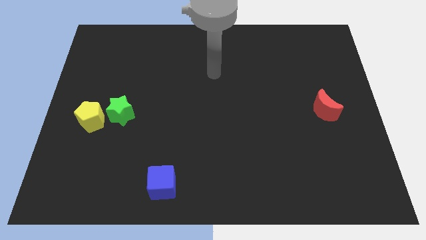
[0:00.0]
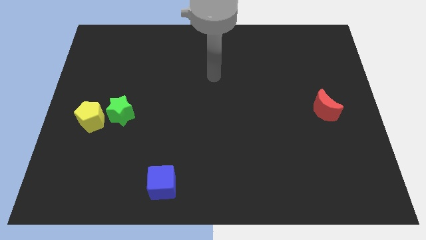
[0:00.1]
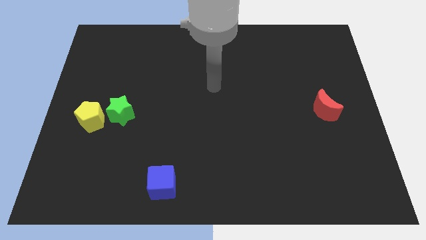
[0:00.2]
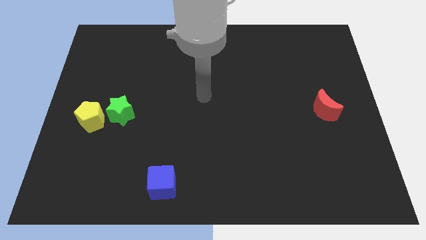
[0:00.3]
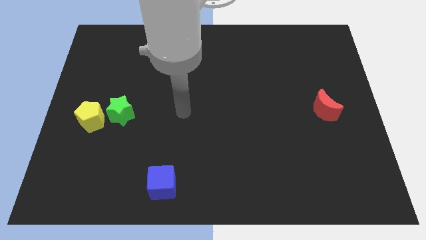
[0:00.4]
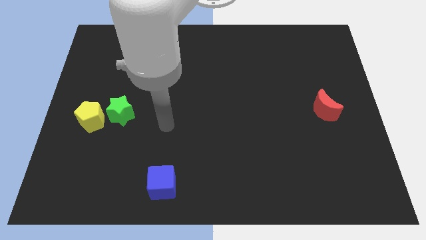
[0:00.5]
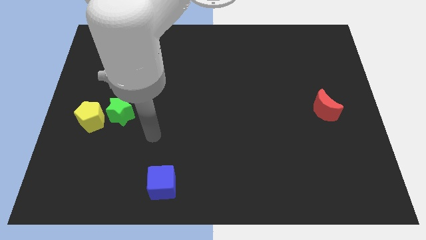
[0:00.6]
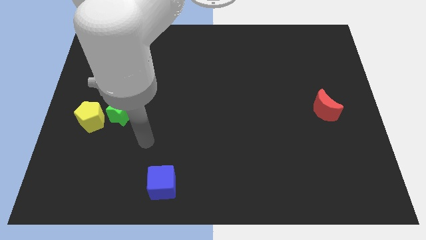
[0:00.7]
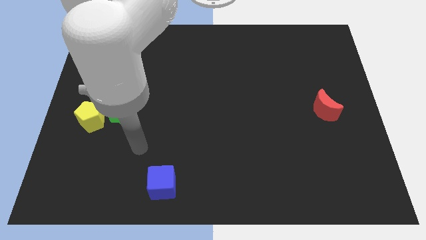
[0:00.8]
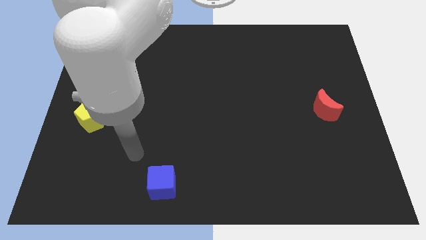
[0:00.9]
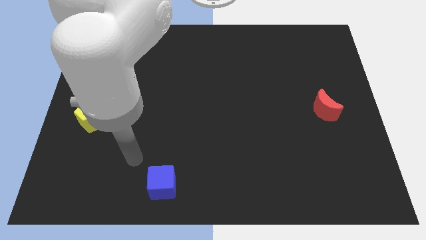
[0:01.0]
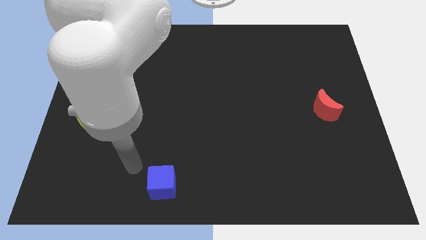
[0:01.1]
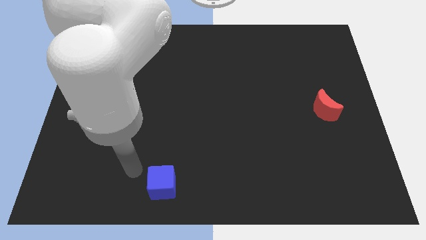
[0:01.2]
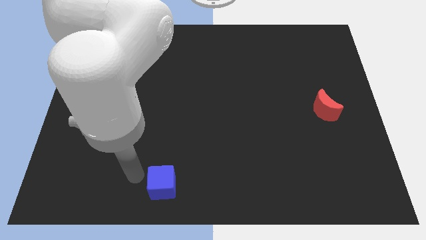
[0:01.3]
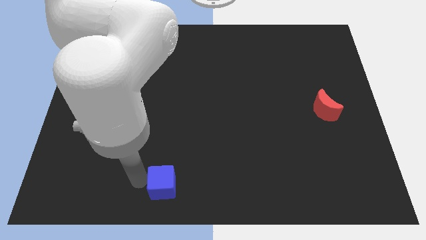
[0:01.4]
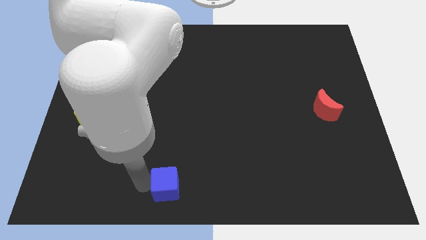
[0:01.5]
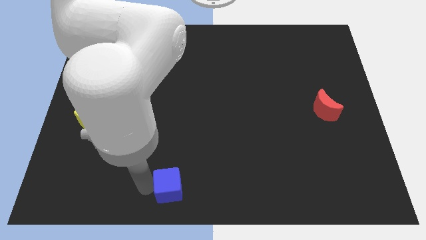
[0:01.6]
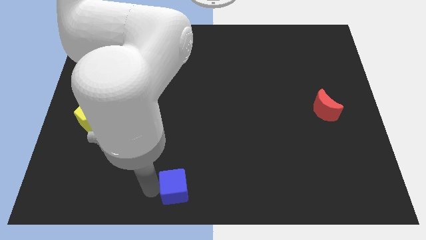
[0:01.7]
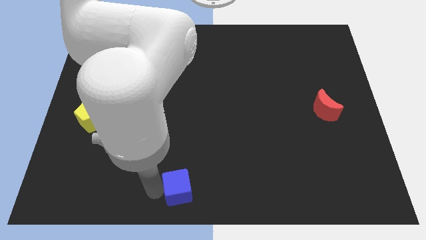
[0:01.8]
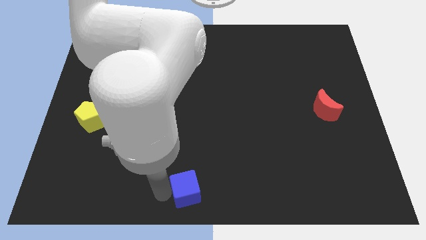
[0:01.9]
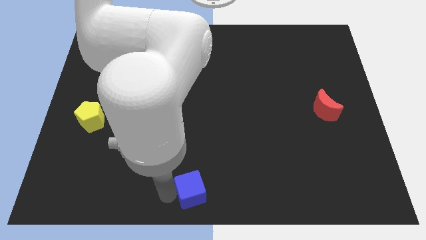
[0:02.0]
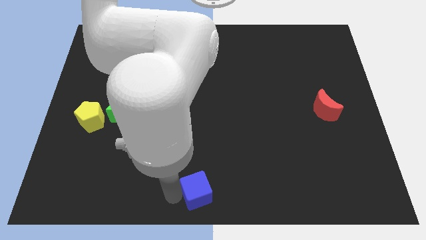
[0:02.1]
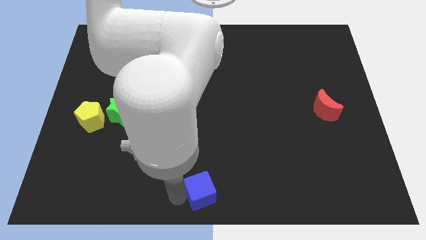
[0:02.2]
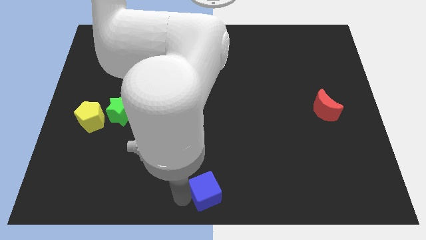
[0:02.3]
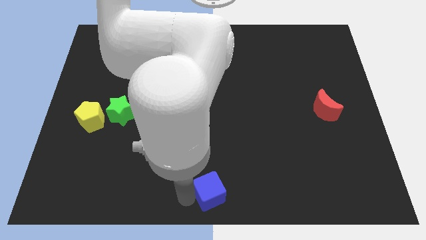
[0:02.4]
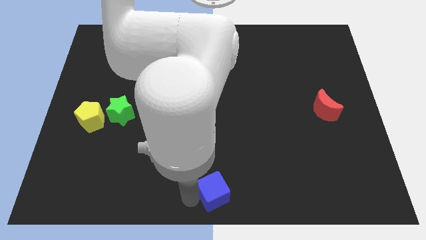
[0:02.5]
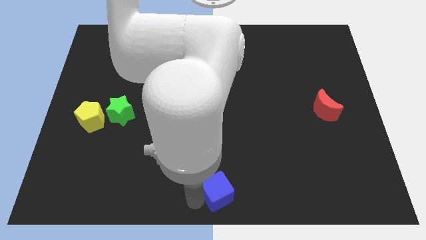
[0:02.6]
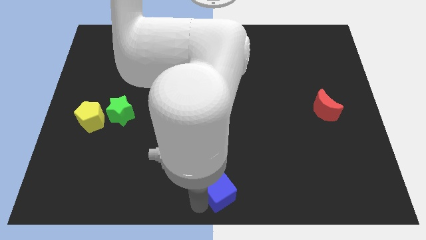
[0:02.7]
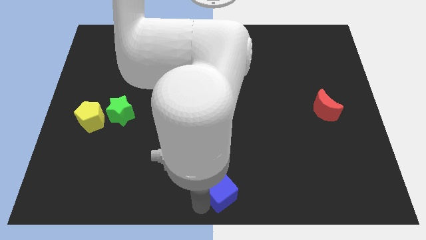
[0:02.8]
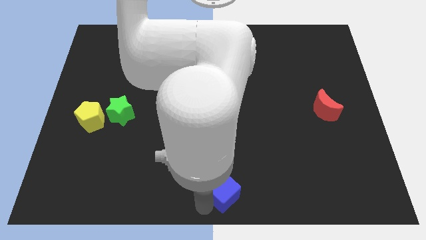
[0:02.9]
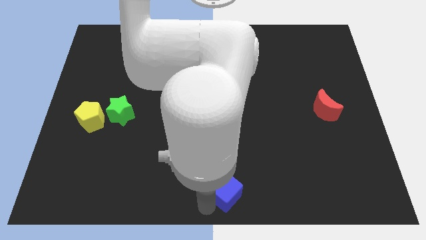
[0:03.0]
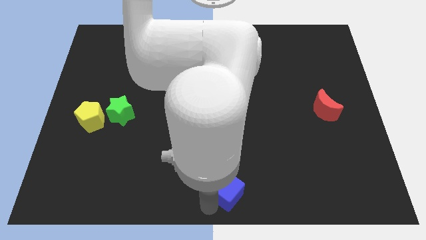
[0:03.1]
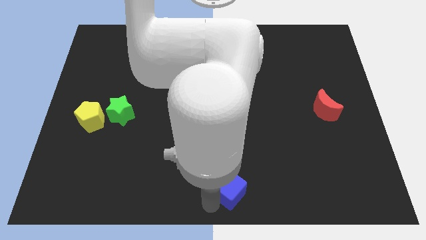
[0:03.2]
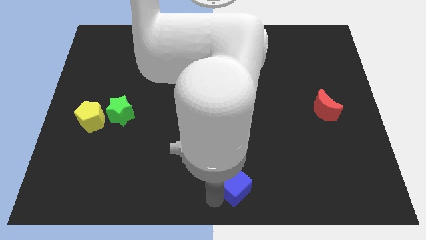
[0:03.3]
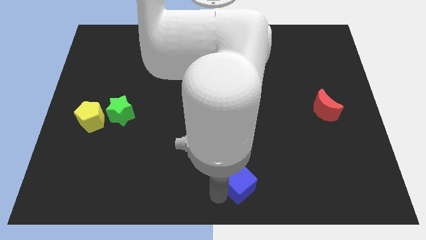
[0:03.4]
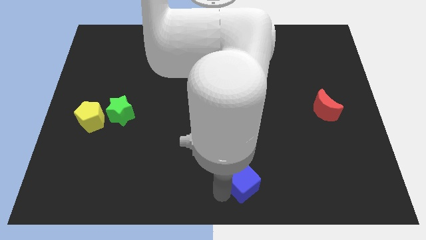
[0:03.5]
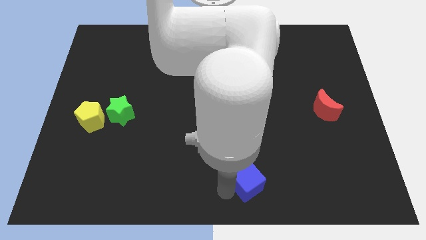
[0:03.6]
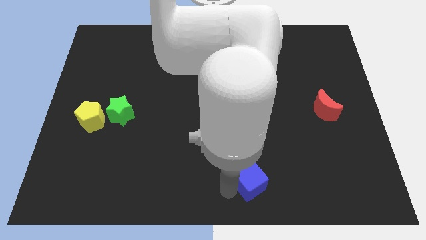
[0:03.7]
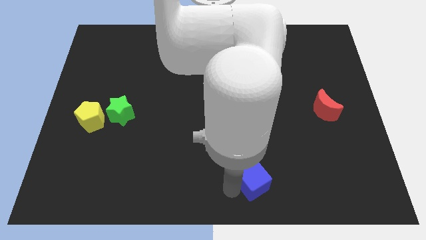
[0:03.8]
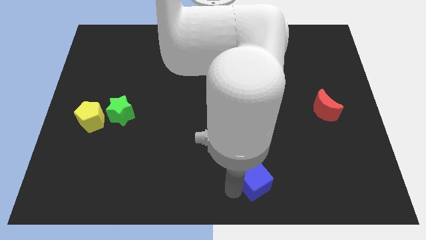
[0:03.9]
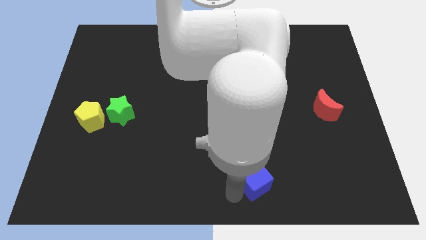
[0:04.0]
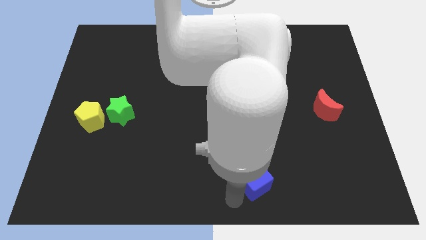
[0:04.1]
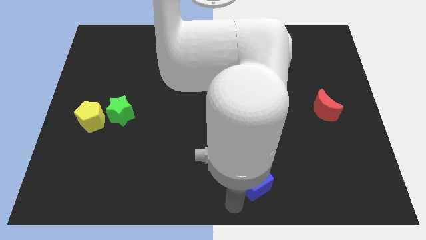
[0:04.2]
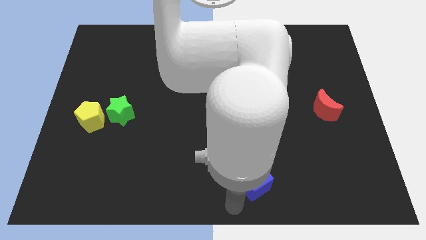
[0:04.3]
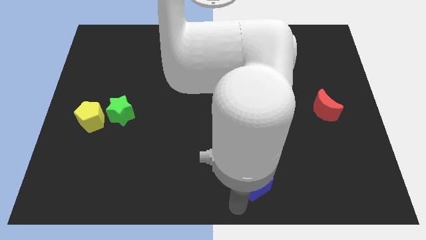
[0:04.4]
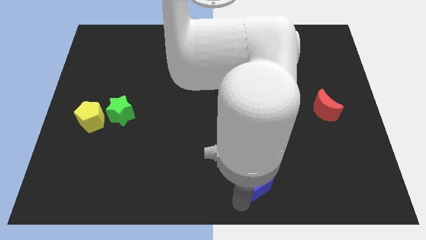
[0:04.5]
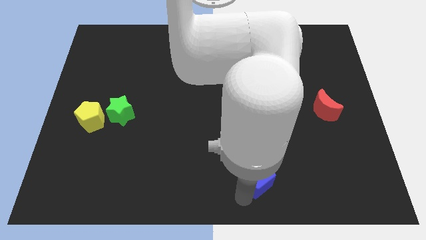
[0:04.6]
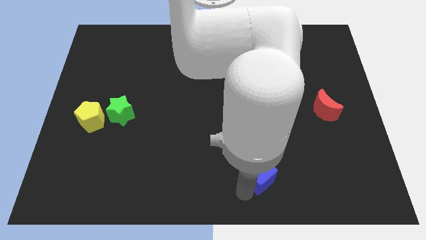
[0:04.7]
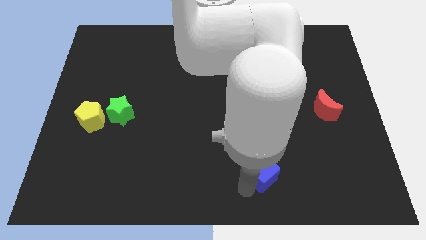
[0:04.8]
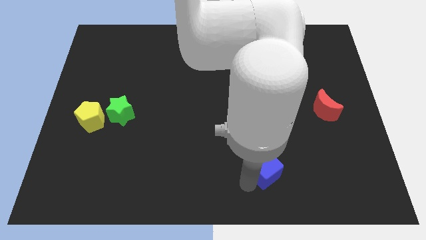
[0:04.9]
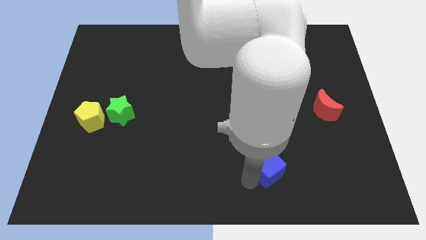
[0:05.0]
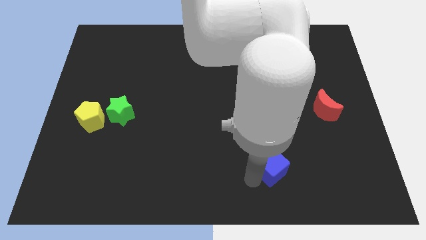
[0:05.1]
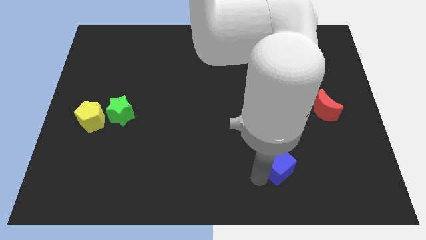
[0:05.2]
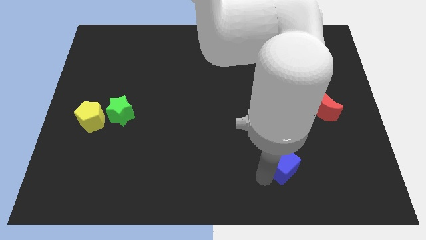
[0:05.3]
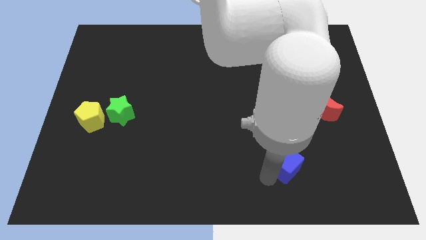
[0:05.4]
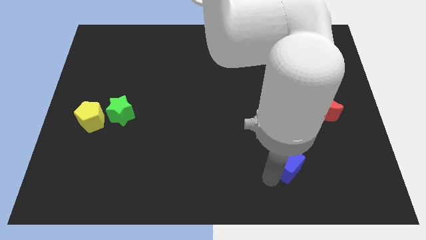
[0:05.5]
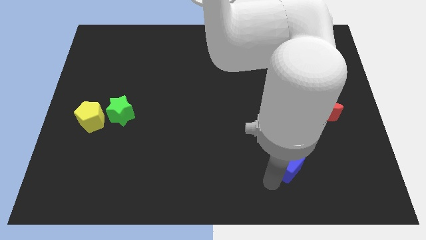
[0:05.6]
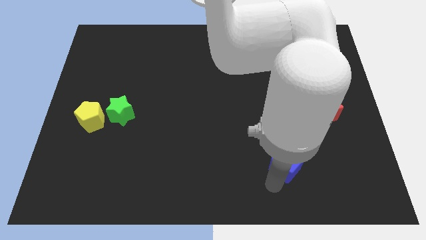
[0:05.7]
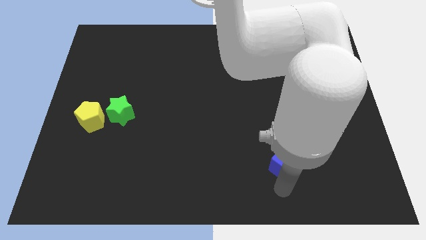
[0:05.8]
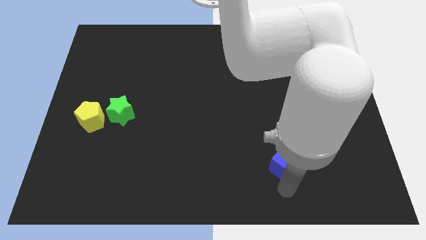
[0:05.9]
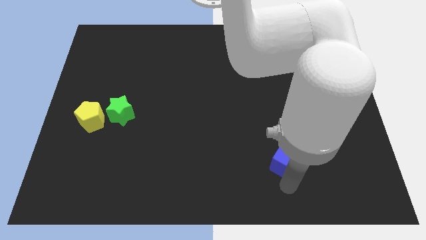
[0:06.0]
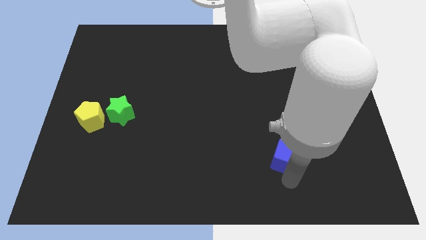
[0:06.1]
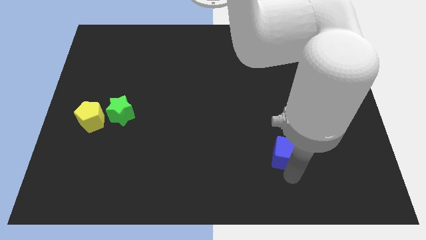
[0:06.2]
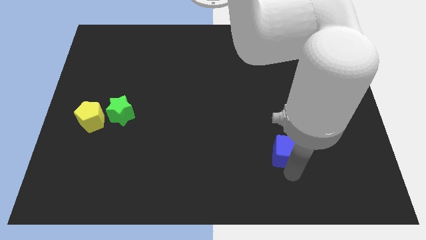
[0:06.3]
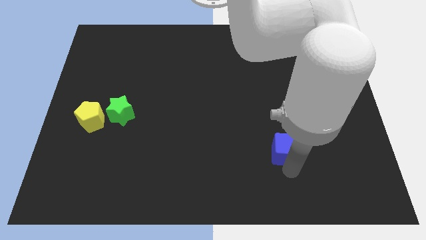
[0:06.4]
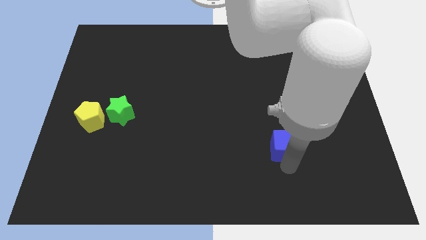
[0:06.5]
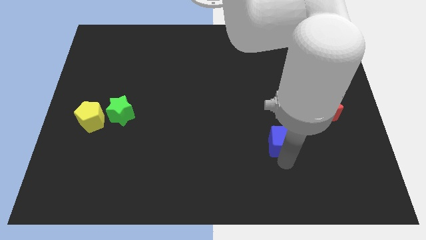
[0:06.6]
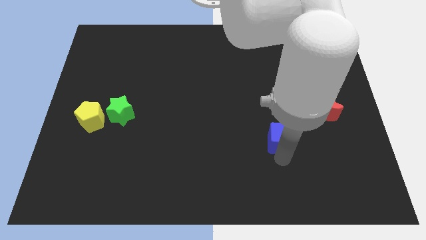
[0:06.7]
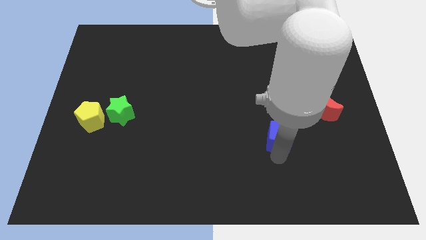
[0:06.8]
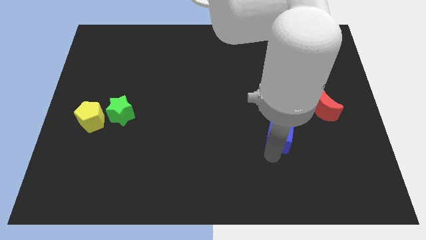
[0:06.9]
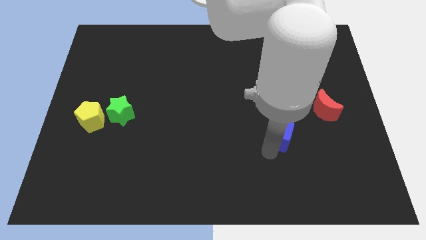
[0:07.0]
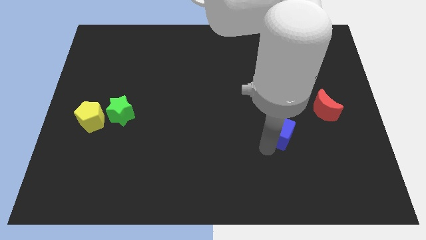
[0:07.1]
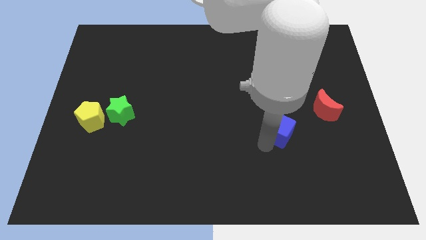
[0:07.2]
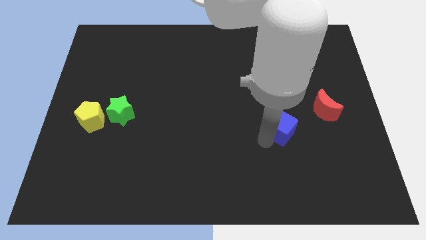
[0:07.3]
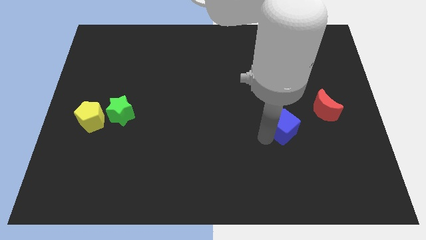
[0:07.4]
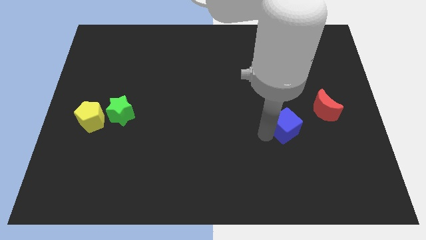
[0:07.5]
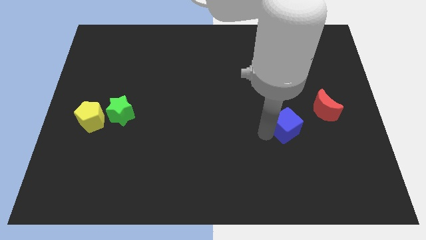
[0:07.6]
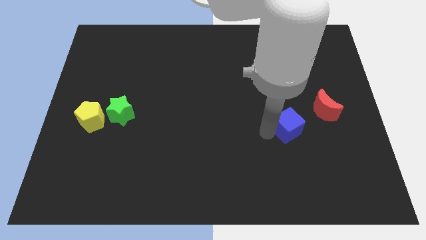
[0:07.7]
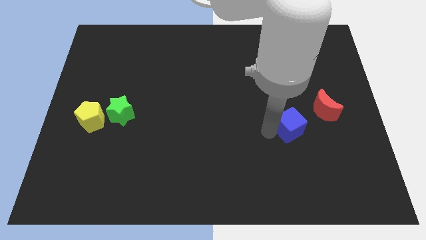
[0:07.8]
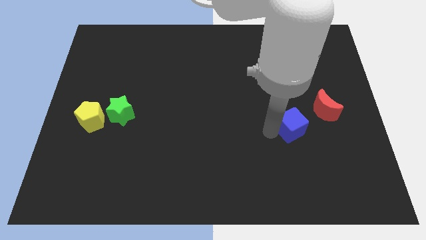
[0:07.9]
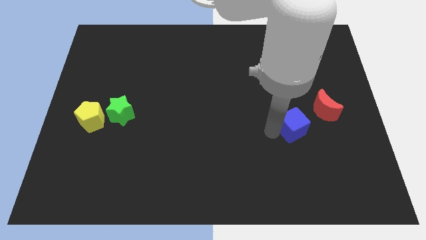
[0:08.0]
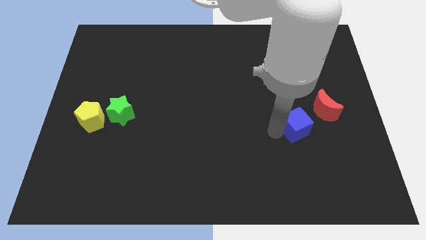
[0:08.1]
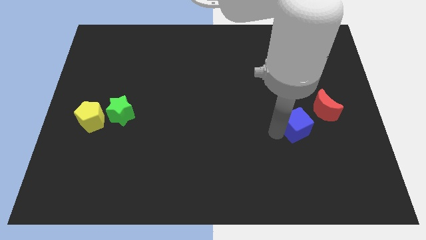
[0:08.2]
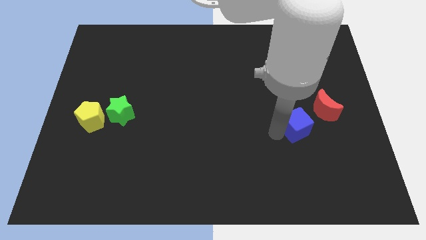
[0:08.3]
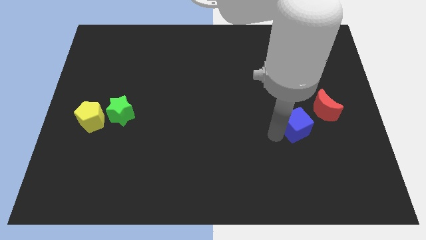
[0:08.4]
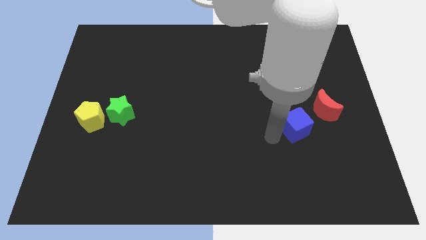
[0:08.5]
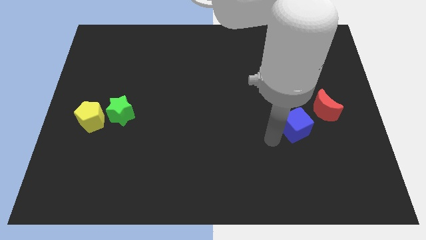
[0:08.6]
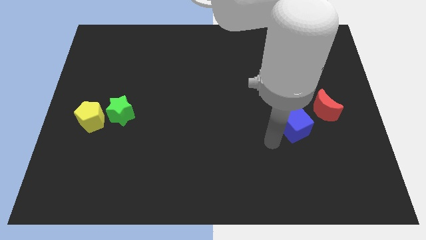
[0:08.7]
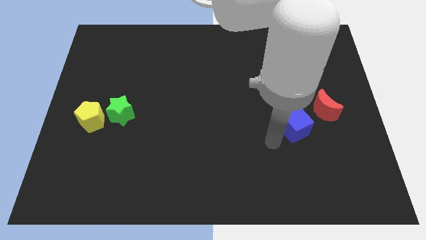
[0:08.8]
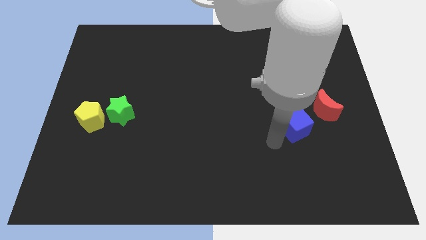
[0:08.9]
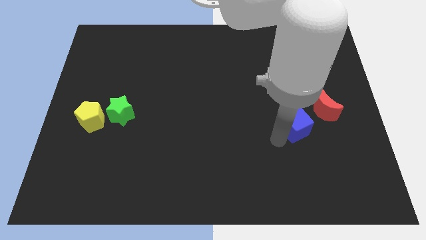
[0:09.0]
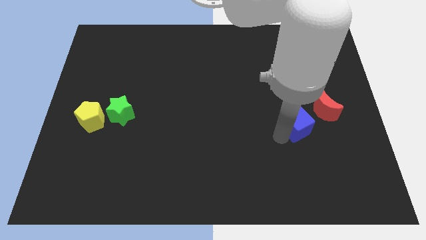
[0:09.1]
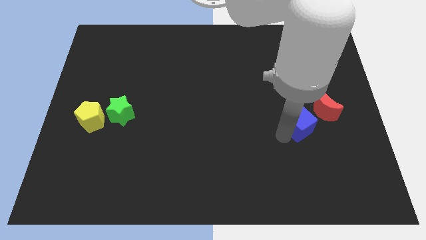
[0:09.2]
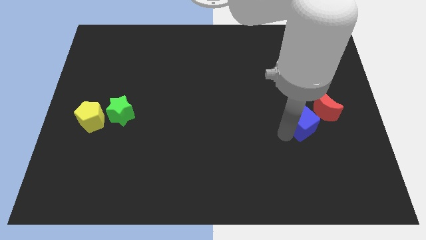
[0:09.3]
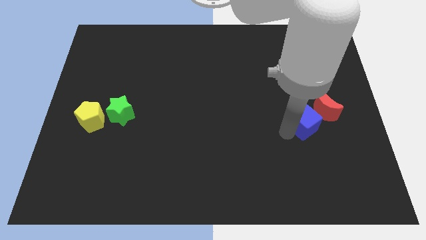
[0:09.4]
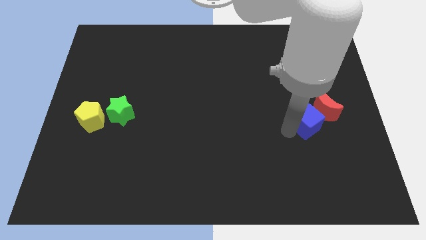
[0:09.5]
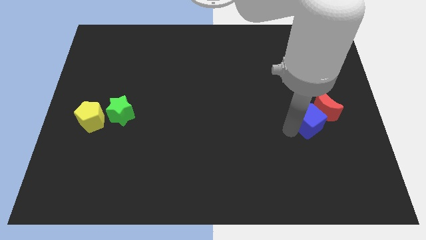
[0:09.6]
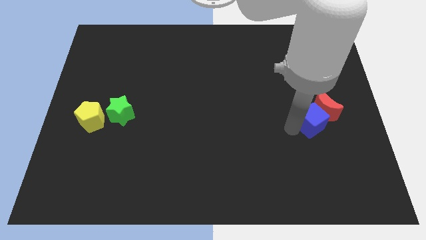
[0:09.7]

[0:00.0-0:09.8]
move the blue cube towards the moon
